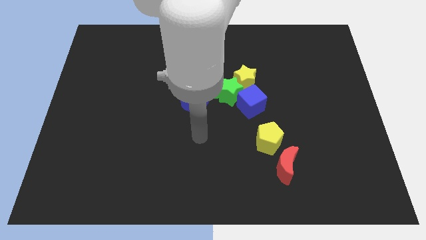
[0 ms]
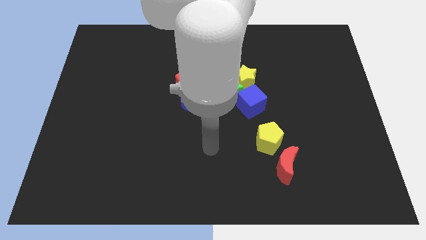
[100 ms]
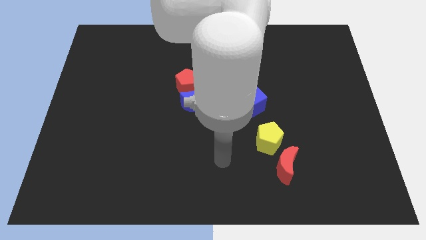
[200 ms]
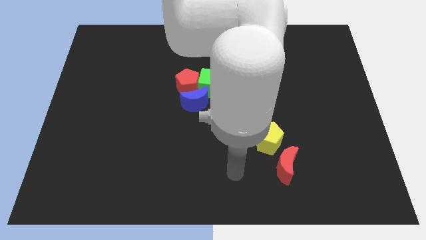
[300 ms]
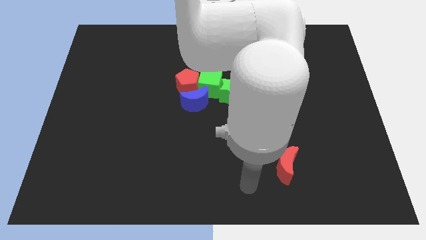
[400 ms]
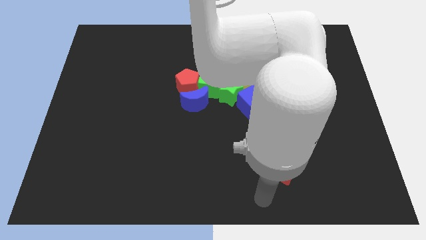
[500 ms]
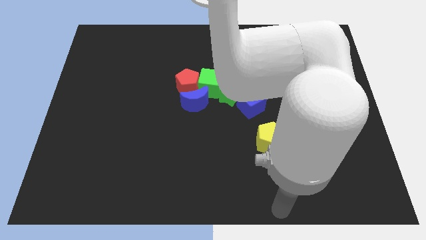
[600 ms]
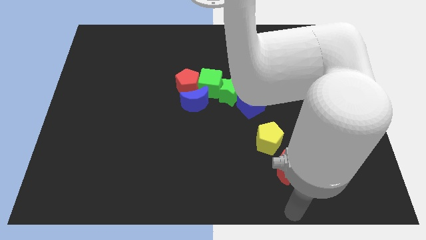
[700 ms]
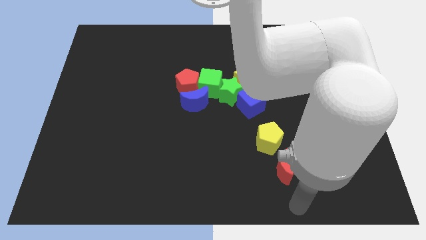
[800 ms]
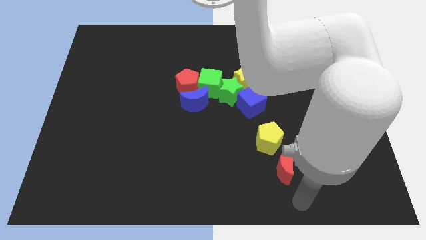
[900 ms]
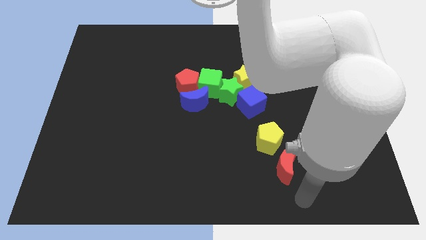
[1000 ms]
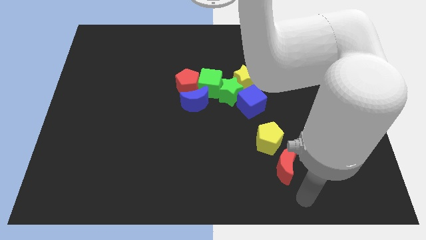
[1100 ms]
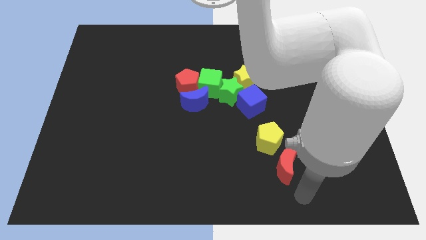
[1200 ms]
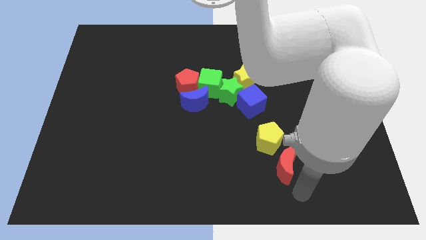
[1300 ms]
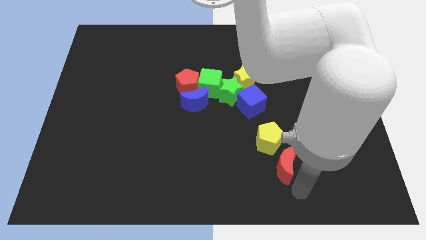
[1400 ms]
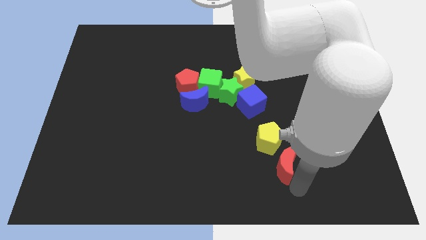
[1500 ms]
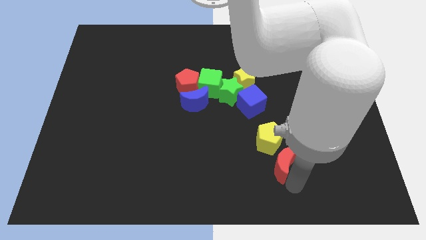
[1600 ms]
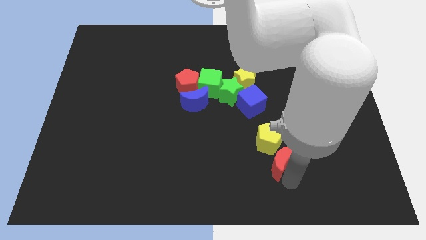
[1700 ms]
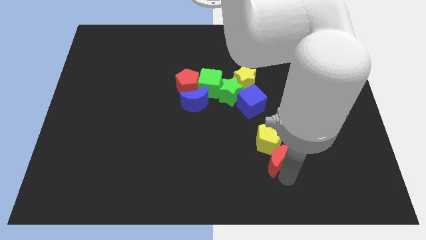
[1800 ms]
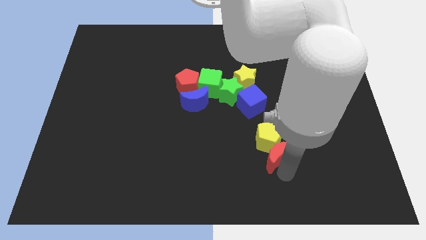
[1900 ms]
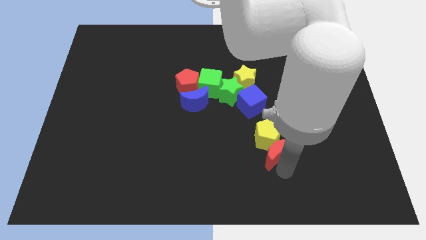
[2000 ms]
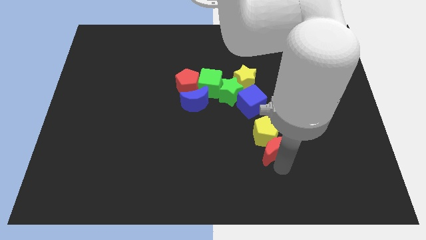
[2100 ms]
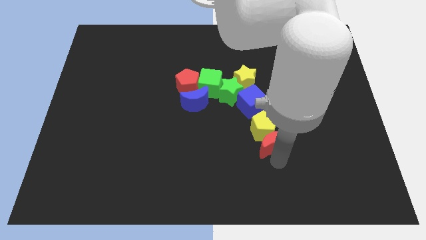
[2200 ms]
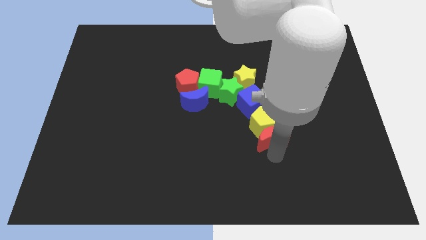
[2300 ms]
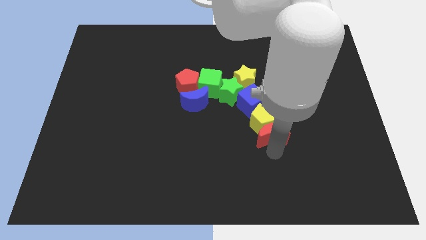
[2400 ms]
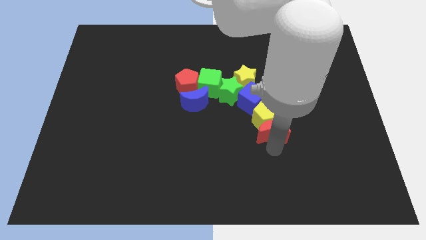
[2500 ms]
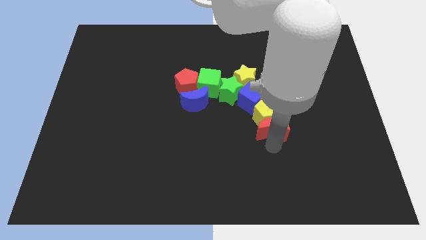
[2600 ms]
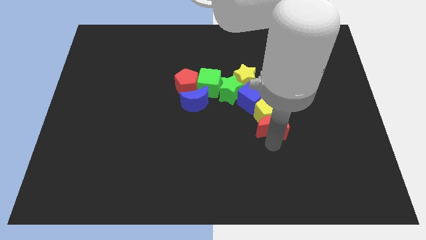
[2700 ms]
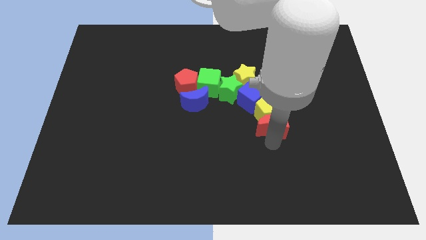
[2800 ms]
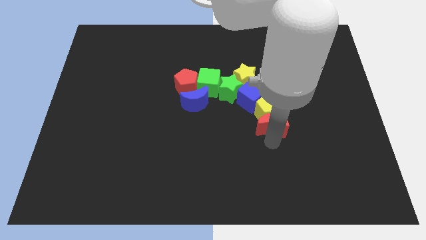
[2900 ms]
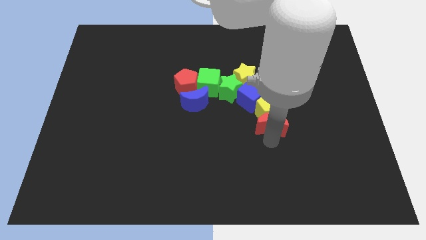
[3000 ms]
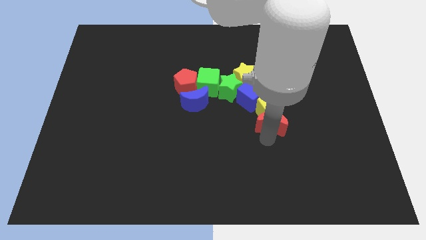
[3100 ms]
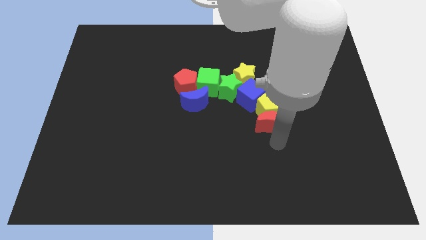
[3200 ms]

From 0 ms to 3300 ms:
push the red moon into the yellow pentagon

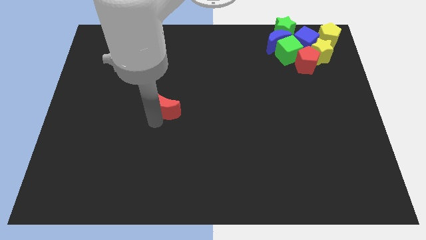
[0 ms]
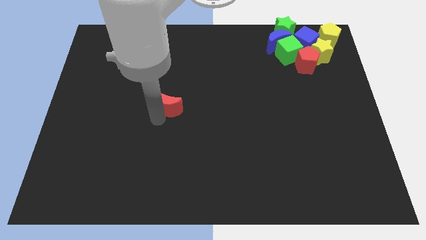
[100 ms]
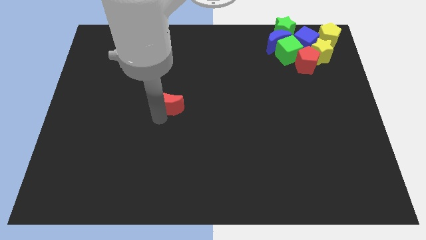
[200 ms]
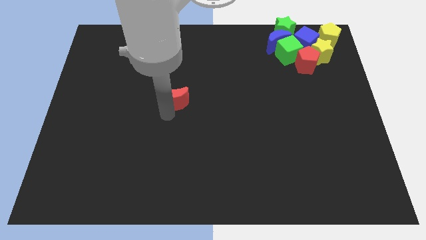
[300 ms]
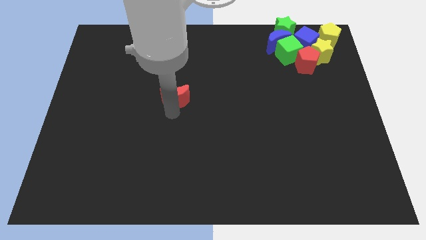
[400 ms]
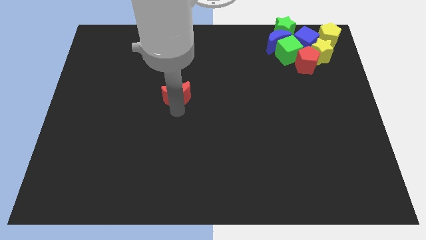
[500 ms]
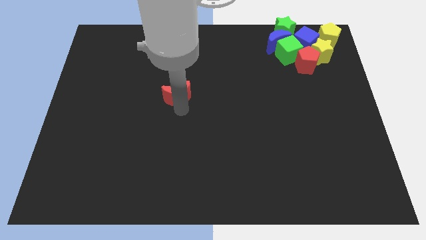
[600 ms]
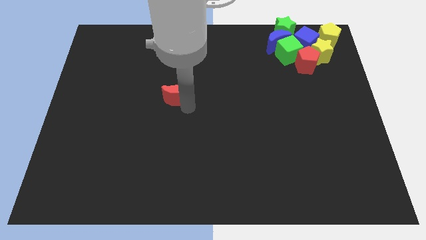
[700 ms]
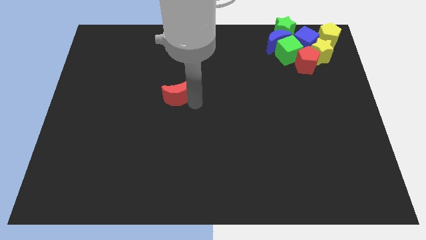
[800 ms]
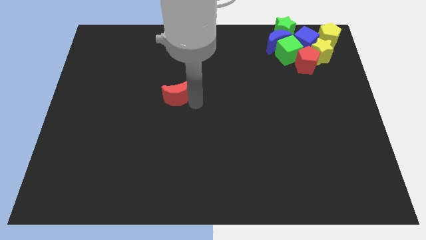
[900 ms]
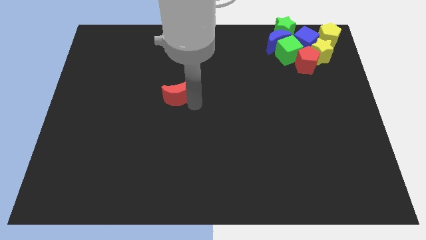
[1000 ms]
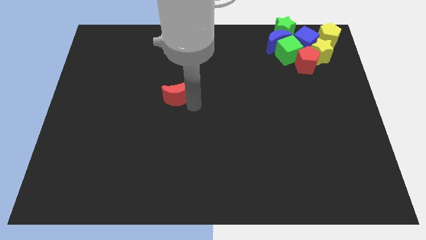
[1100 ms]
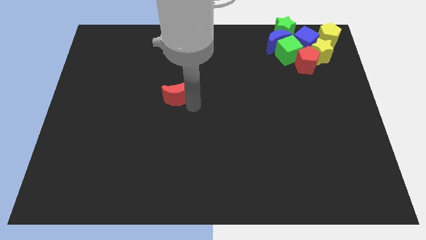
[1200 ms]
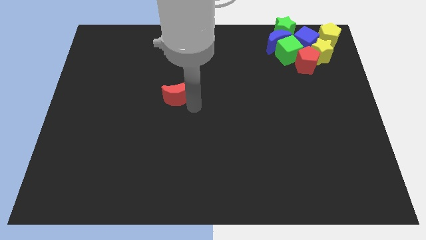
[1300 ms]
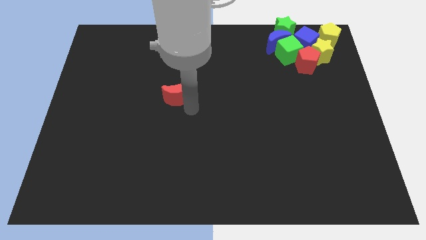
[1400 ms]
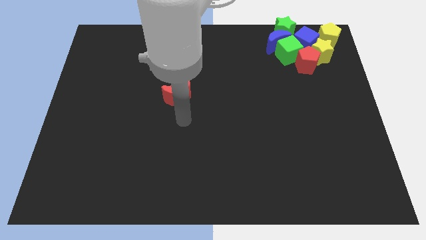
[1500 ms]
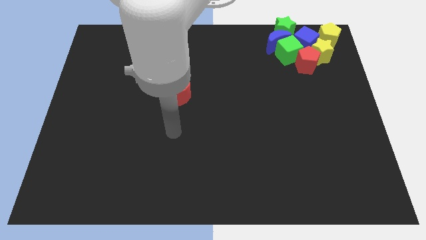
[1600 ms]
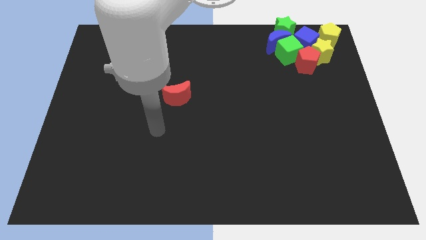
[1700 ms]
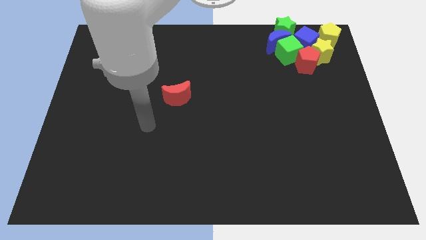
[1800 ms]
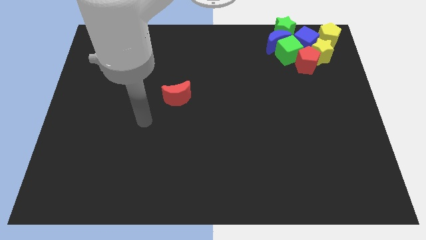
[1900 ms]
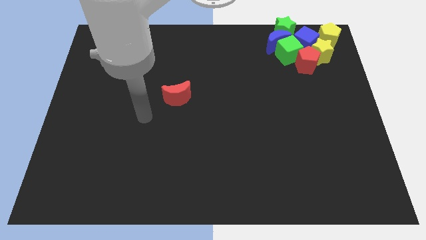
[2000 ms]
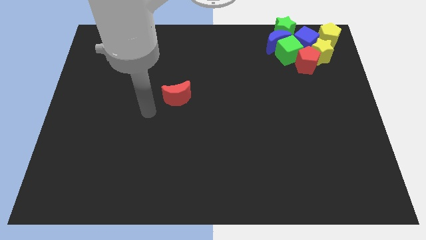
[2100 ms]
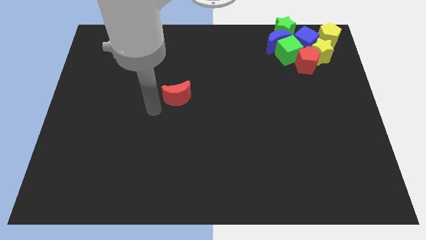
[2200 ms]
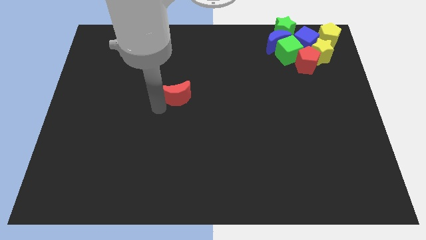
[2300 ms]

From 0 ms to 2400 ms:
push red crescent towards top

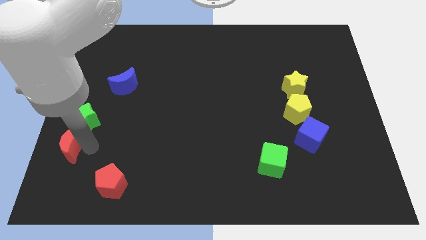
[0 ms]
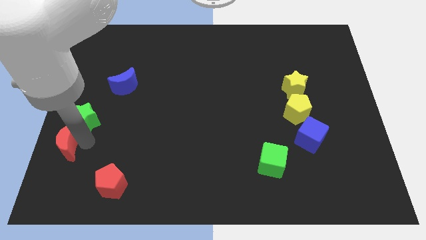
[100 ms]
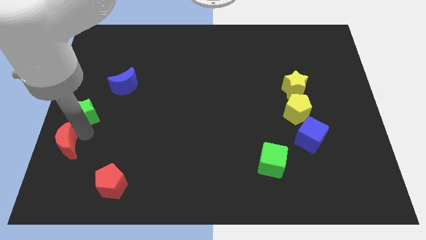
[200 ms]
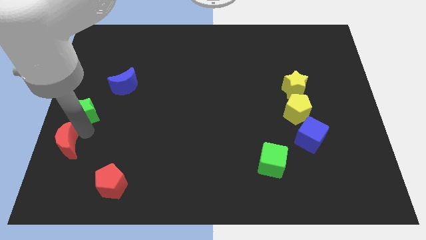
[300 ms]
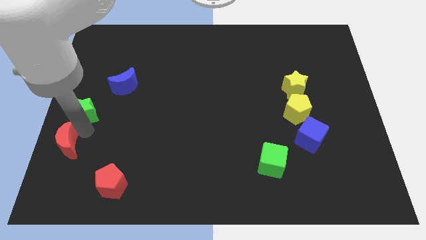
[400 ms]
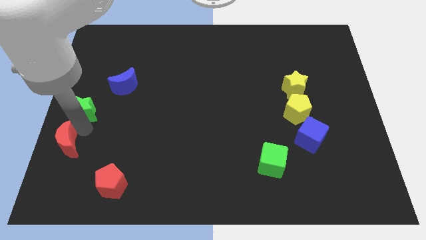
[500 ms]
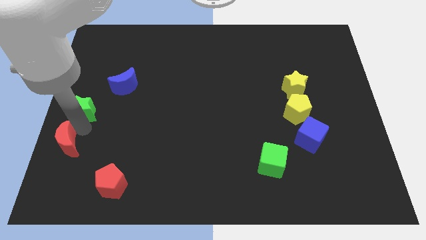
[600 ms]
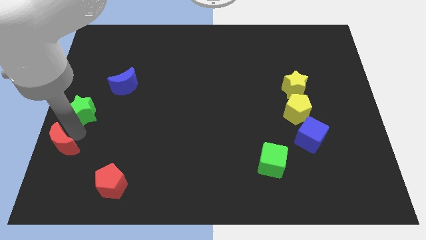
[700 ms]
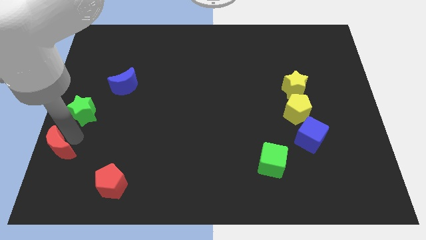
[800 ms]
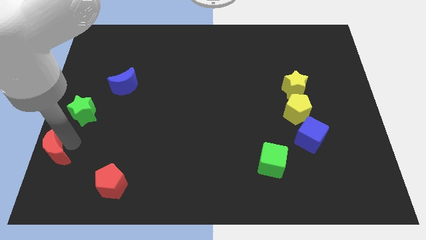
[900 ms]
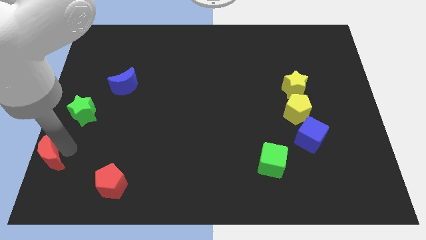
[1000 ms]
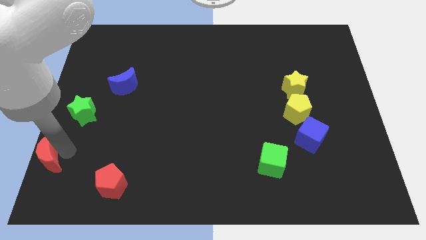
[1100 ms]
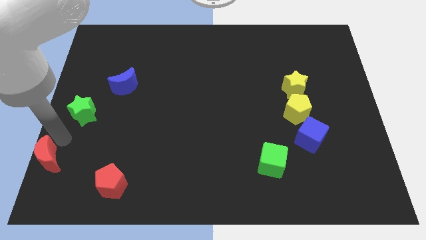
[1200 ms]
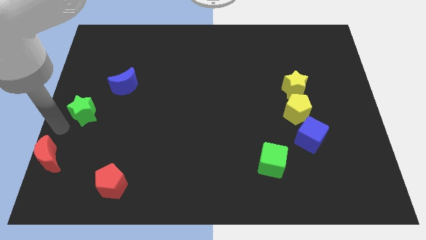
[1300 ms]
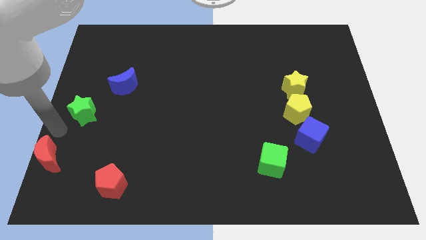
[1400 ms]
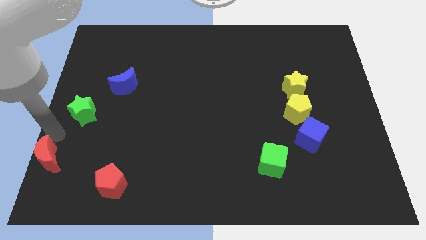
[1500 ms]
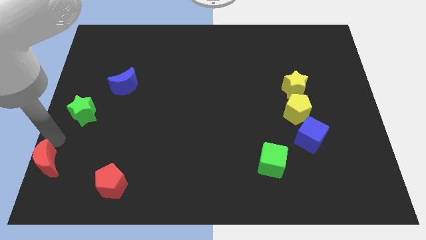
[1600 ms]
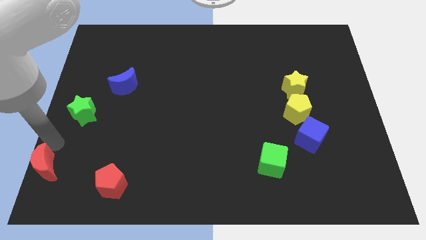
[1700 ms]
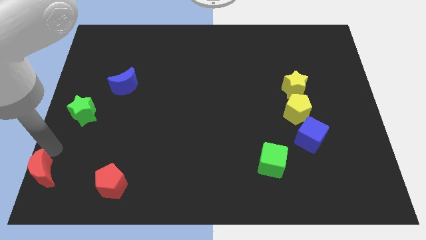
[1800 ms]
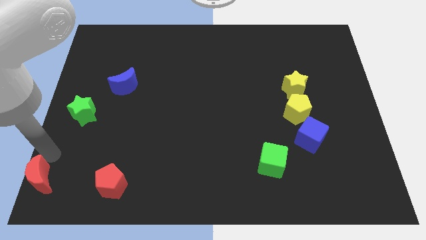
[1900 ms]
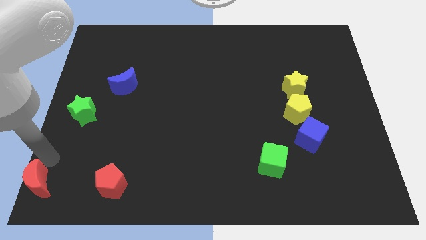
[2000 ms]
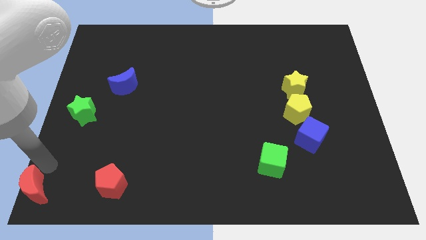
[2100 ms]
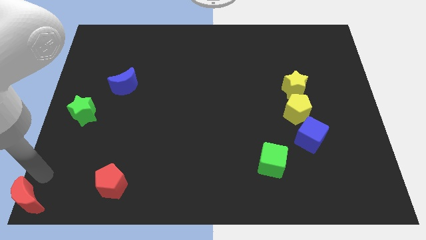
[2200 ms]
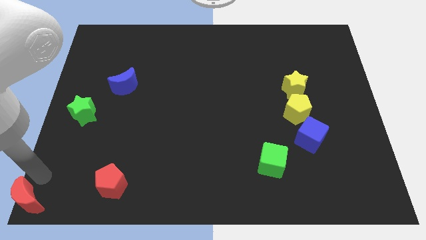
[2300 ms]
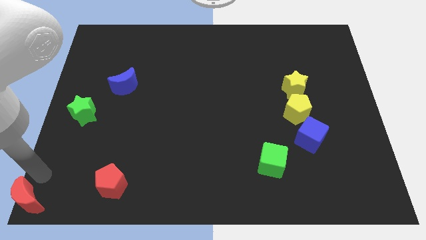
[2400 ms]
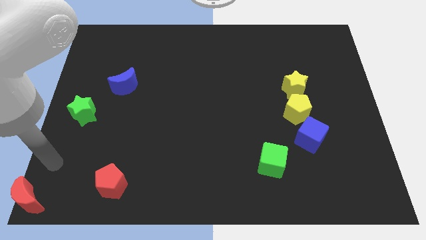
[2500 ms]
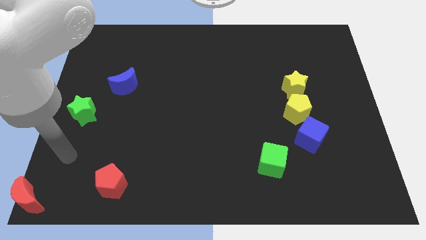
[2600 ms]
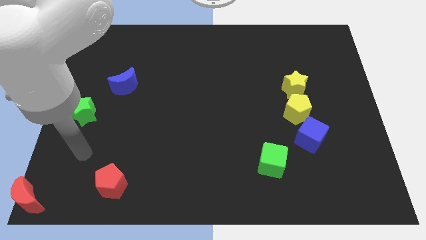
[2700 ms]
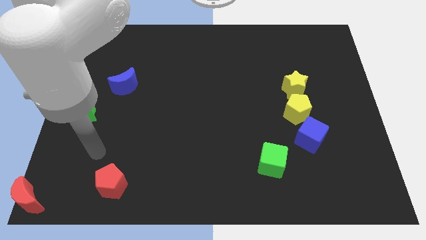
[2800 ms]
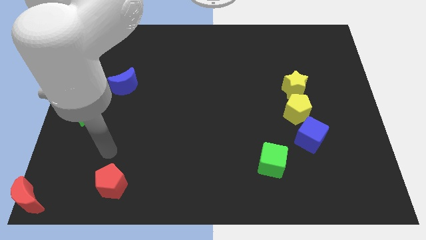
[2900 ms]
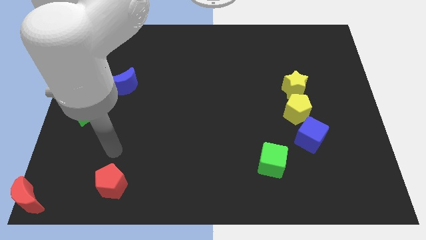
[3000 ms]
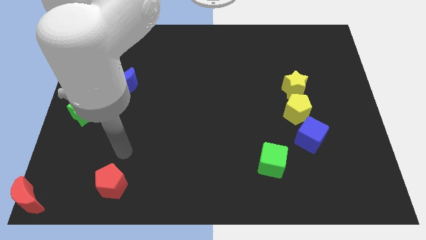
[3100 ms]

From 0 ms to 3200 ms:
separate red moon from green star

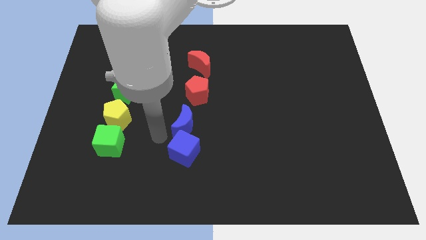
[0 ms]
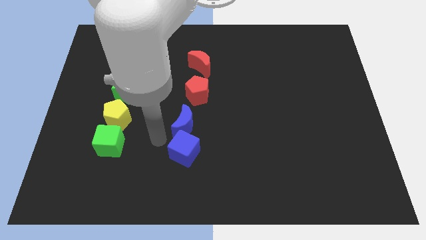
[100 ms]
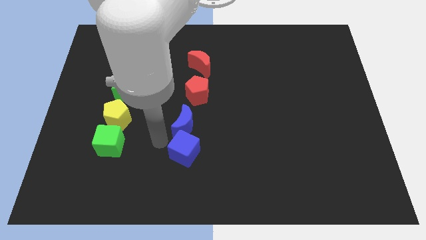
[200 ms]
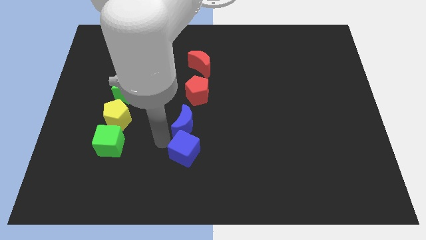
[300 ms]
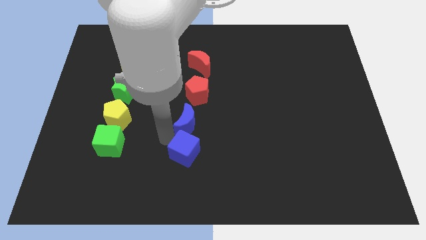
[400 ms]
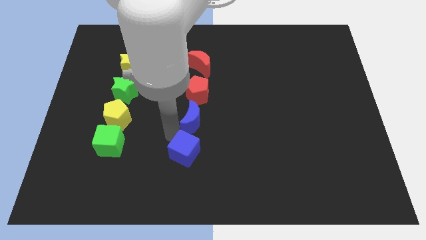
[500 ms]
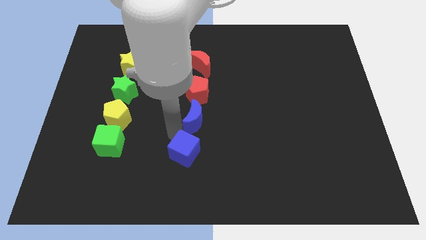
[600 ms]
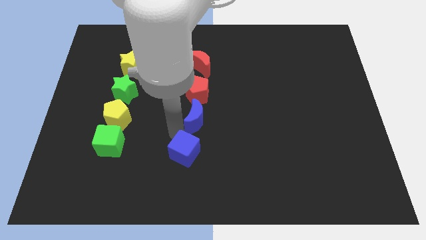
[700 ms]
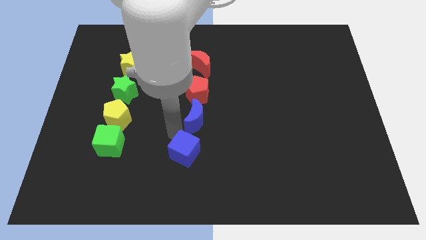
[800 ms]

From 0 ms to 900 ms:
place the blue crescent in between the red pentagon and the blue crescent
